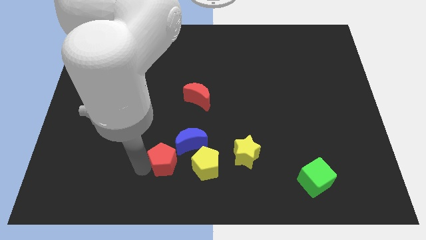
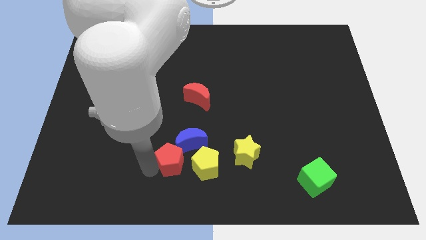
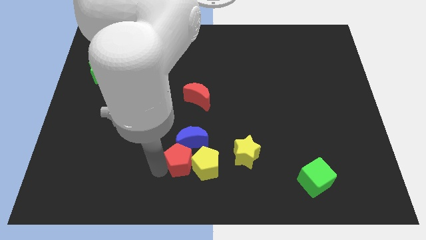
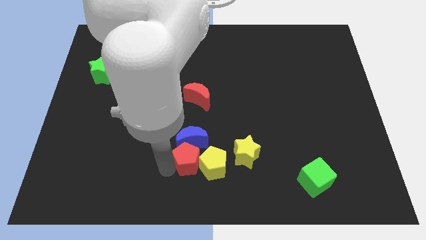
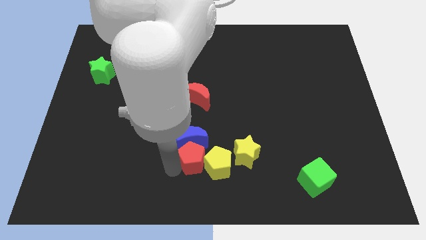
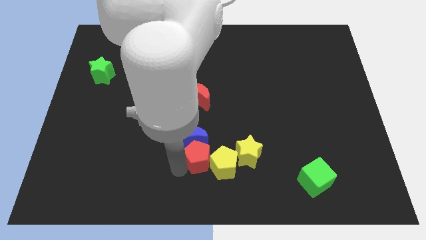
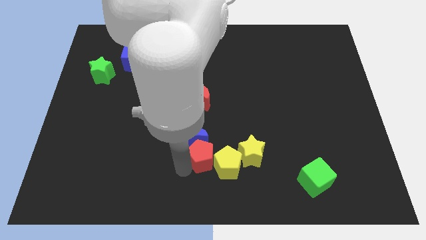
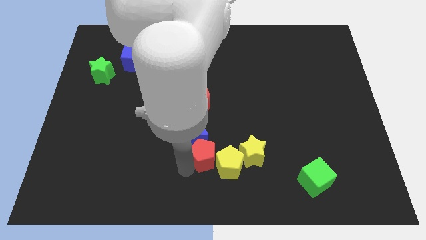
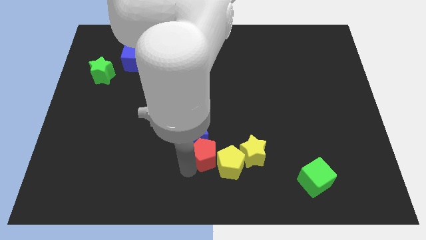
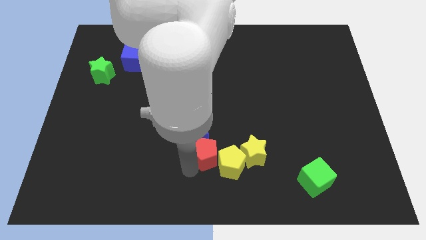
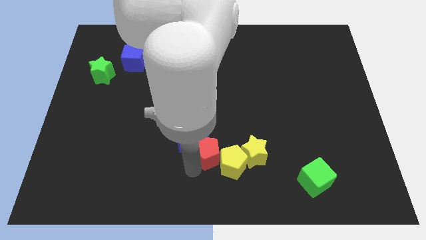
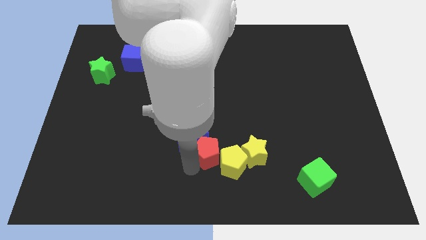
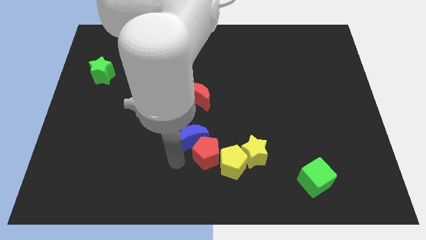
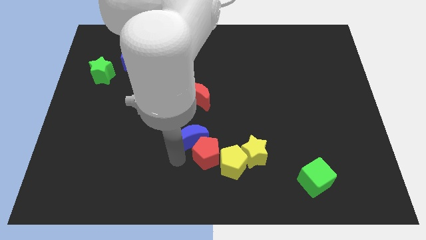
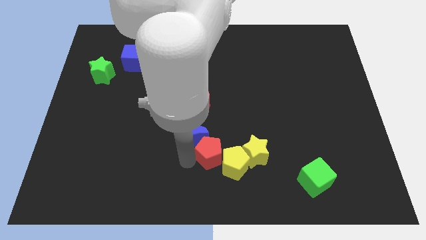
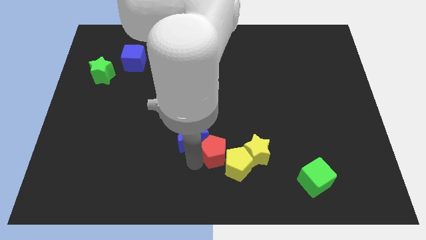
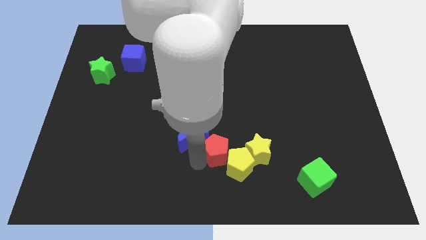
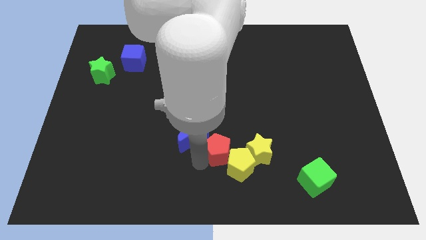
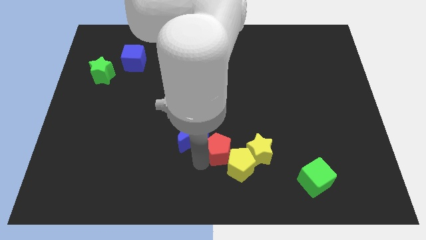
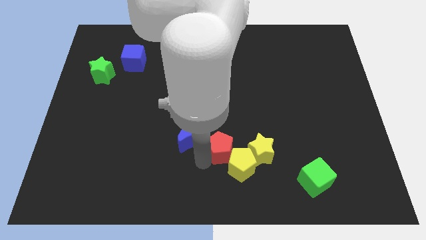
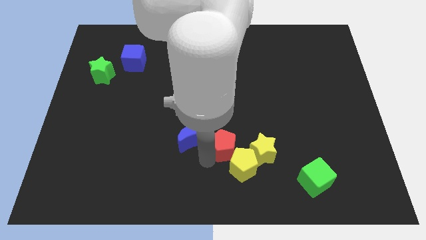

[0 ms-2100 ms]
push yellow pentagon with the red pentagon

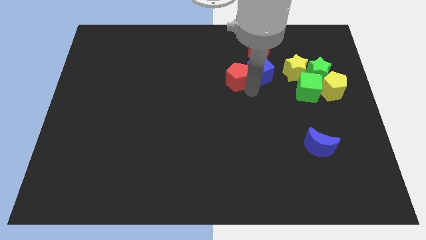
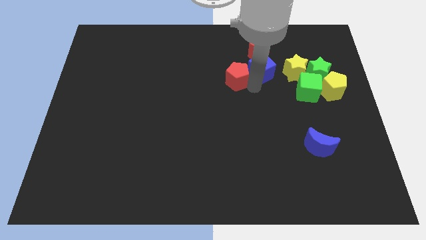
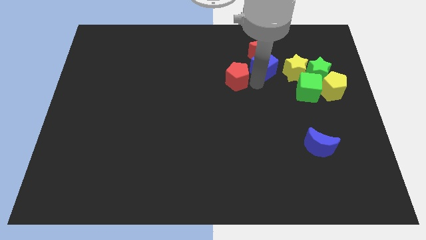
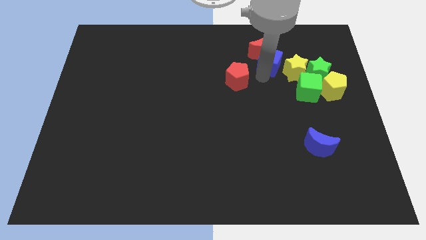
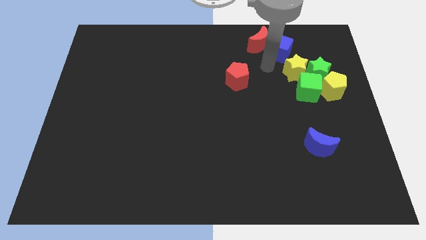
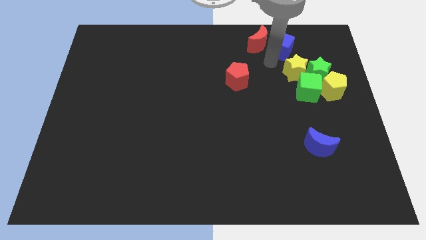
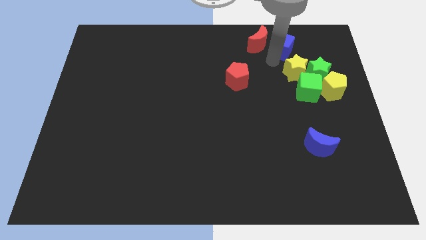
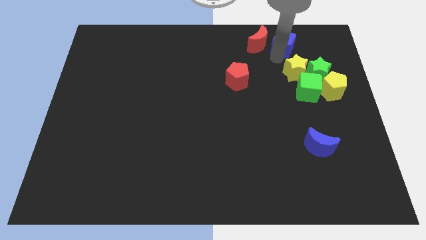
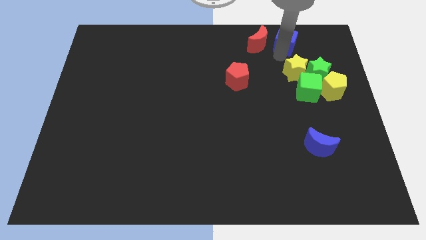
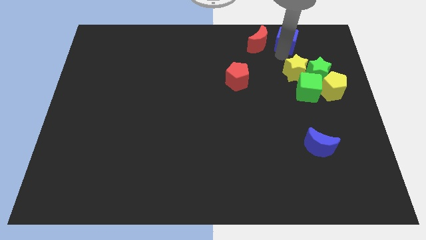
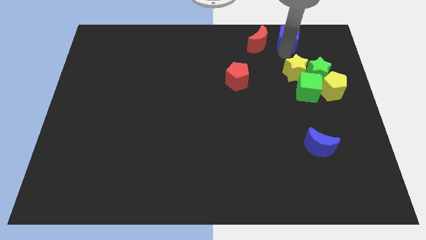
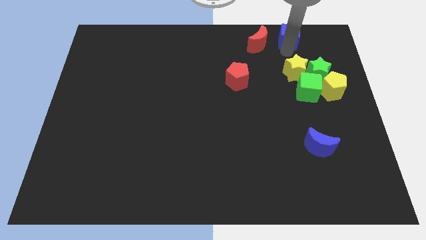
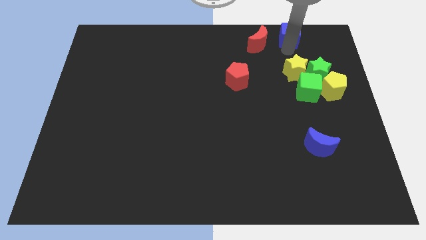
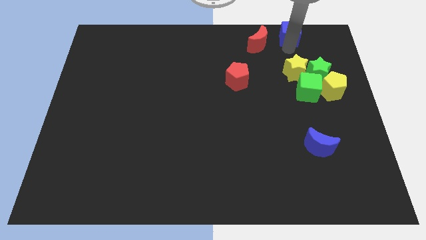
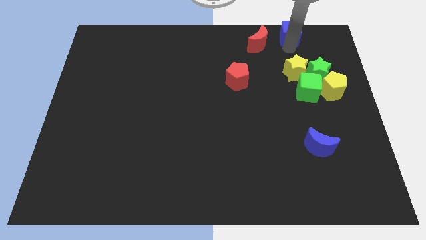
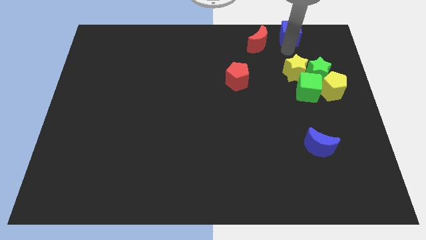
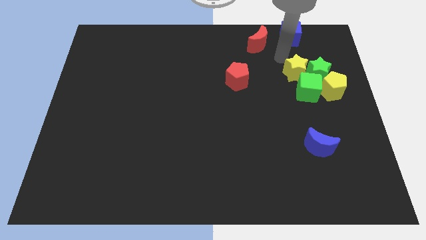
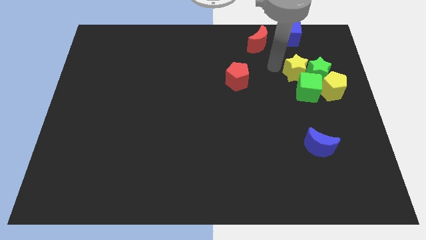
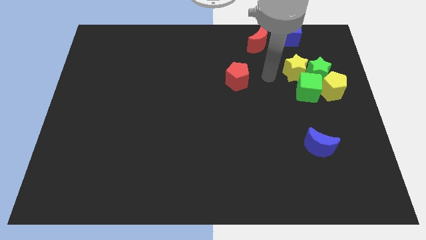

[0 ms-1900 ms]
move the blue cube away from the red pentagon

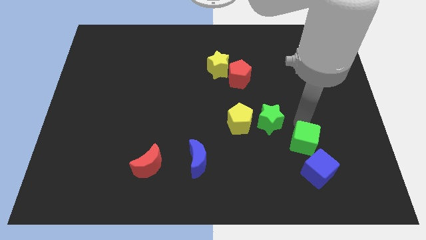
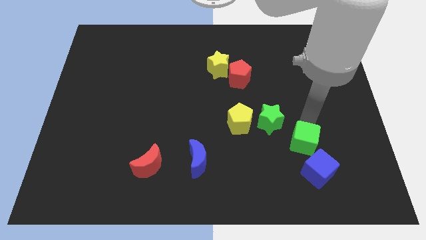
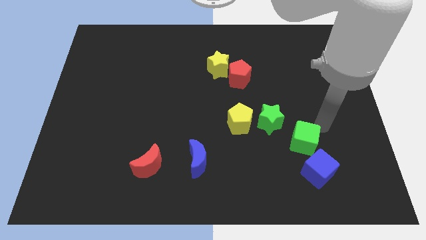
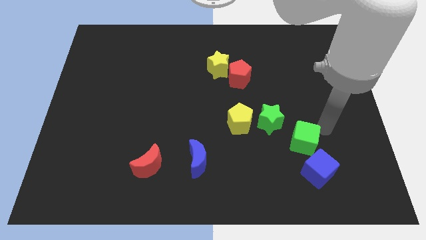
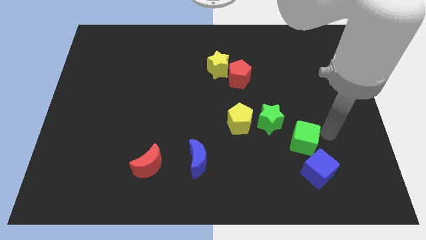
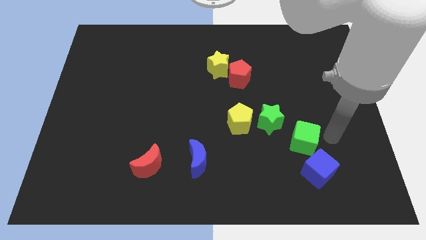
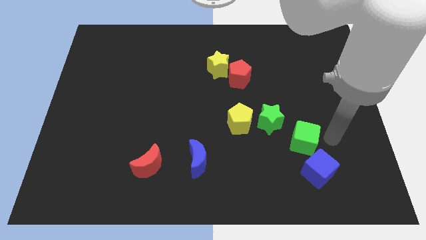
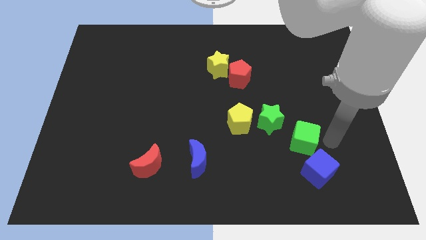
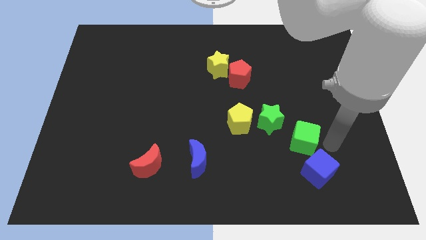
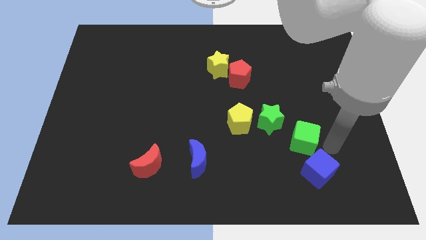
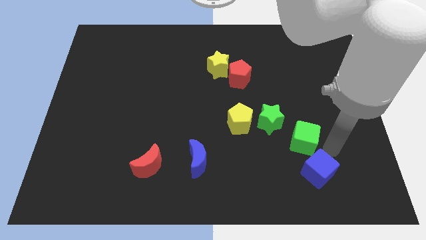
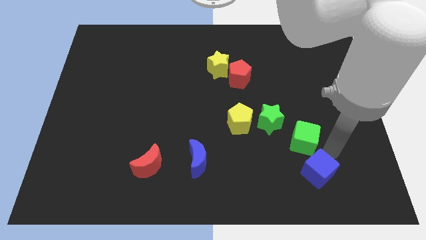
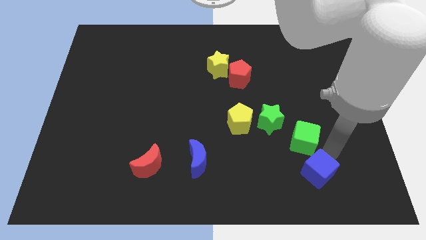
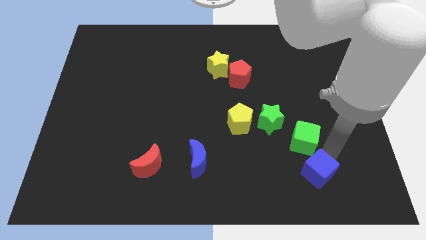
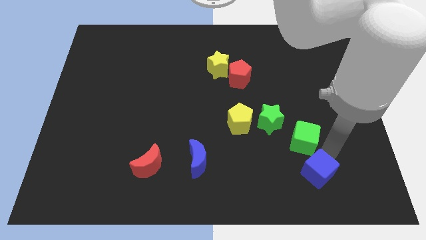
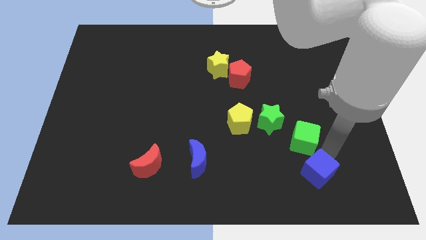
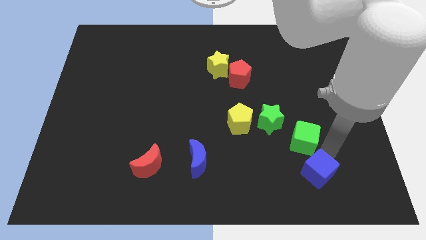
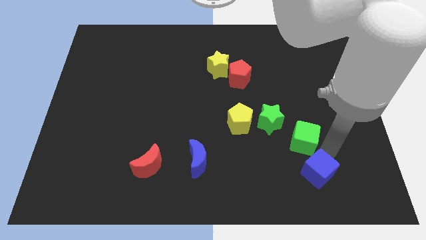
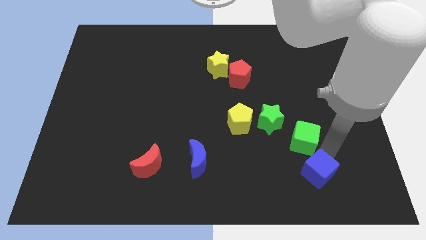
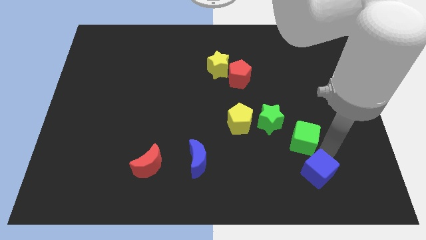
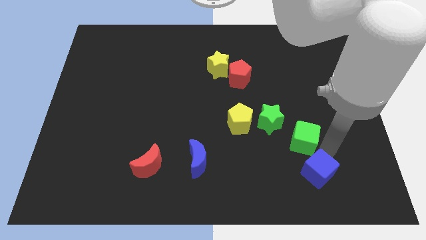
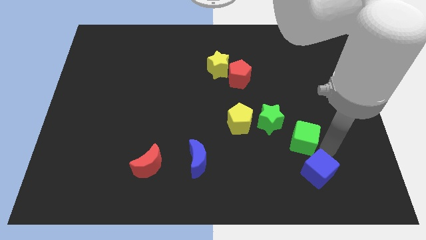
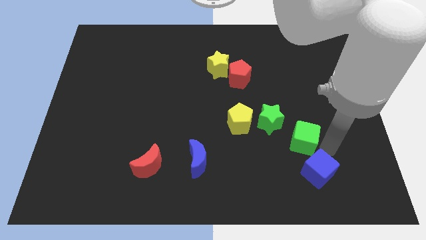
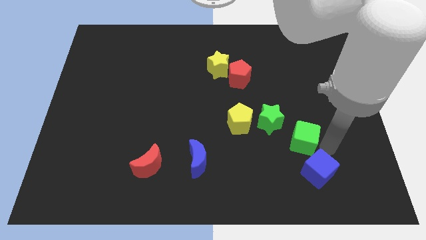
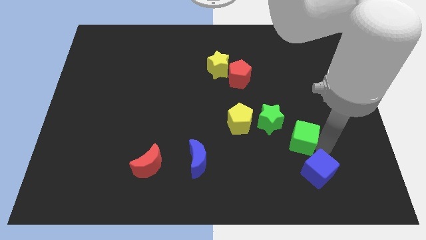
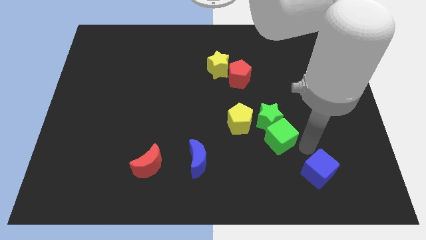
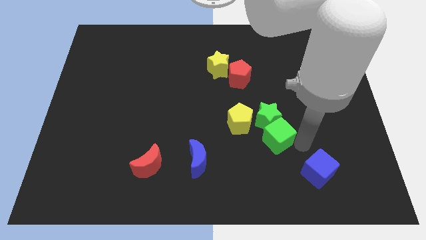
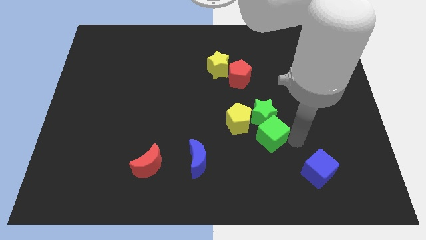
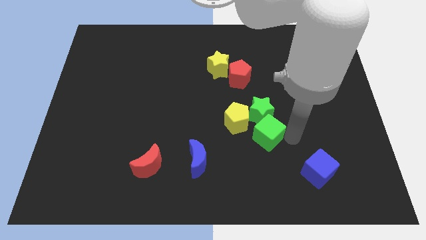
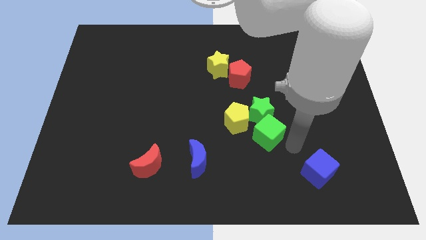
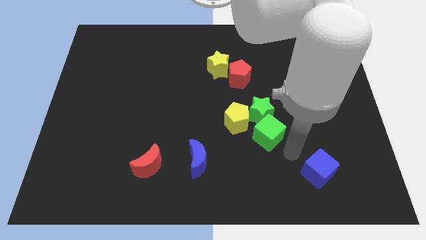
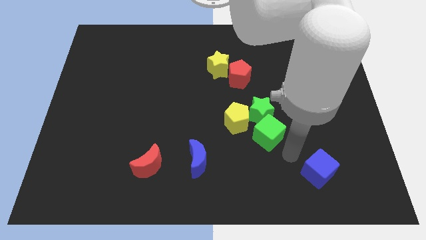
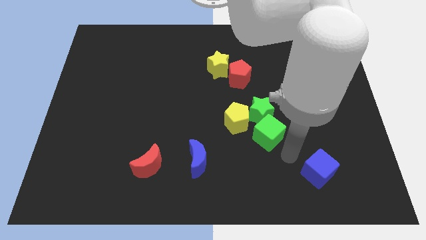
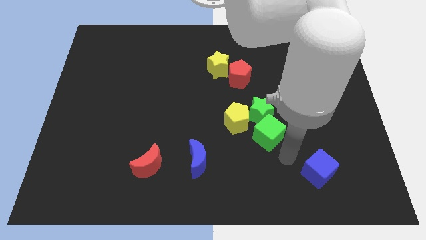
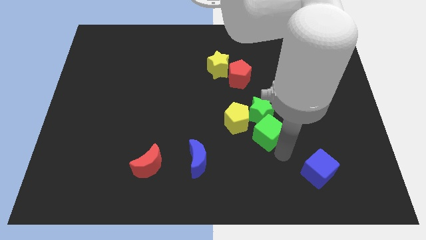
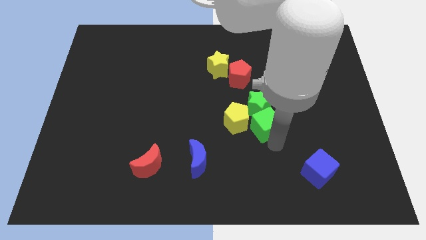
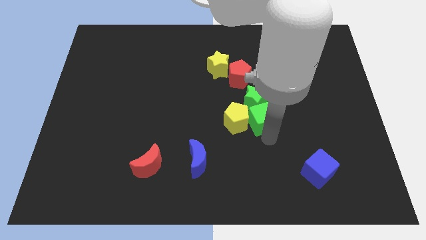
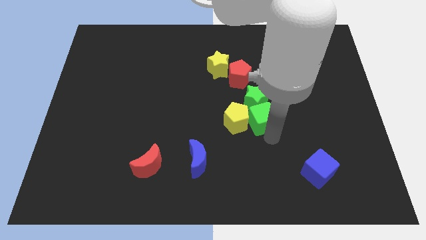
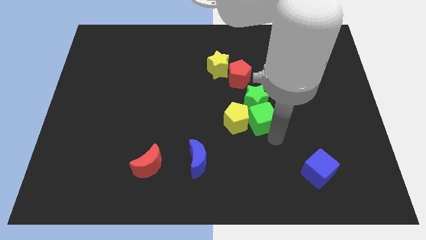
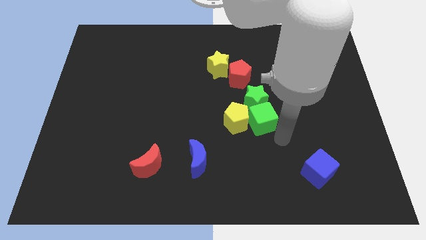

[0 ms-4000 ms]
push green cube in to green star

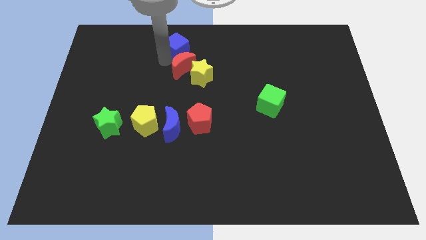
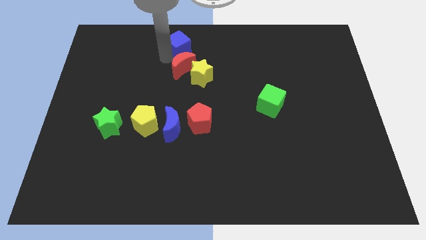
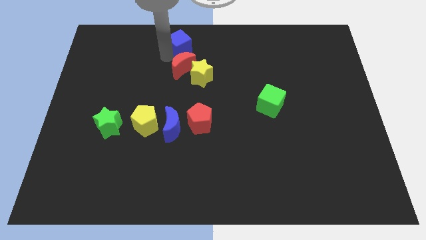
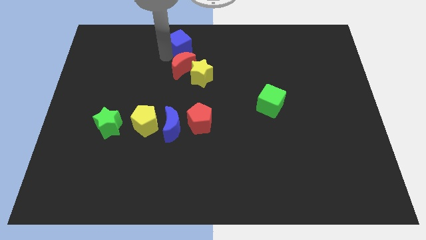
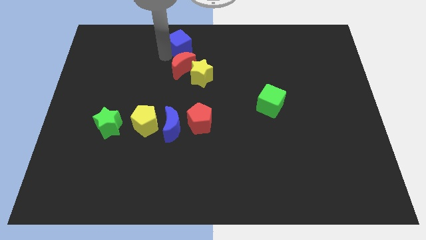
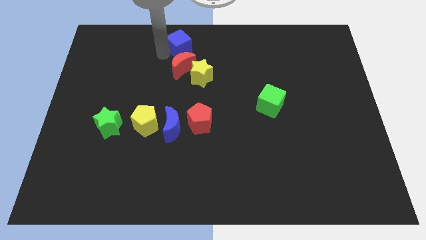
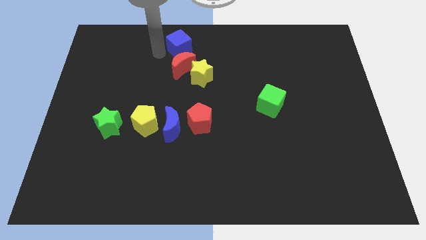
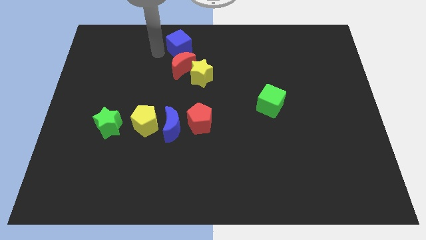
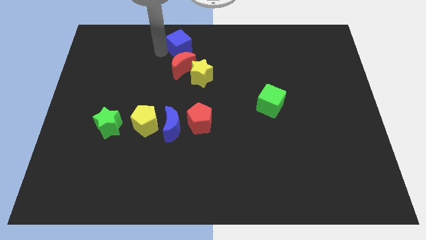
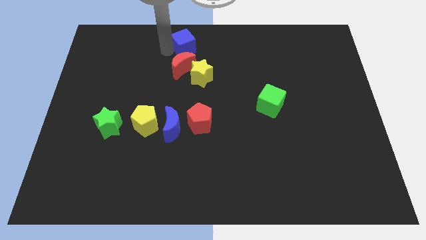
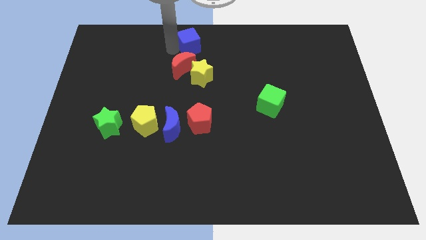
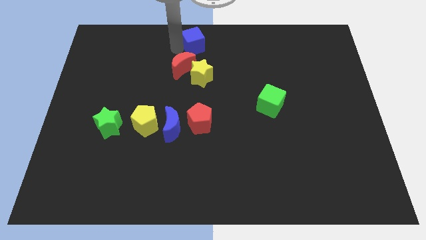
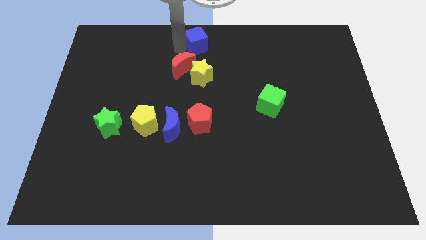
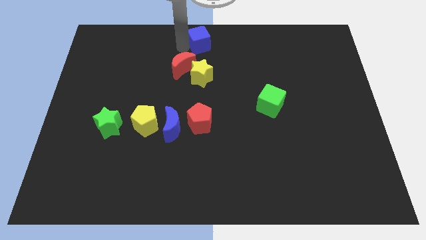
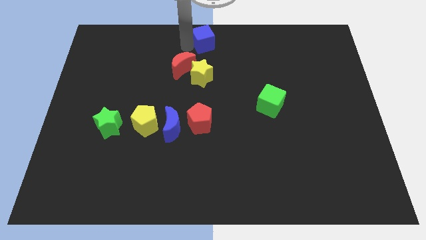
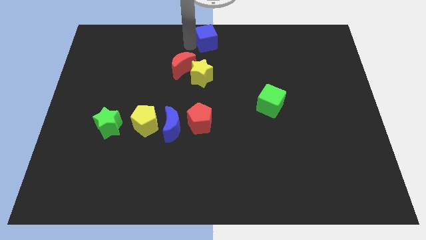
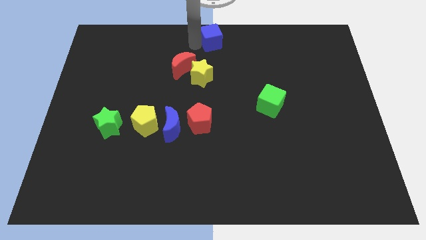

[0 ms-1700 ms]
place the blue cube at the center of the board
